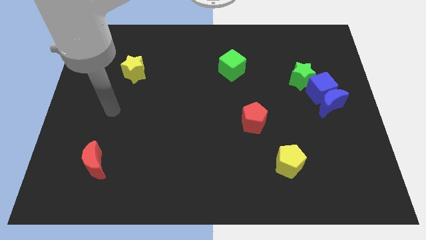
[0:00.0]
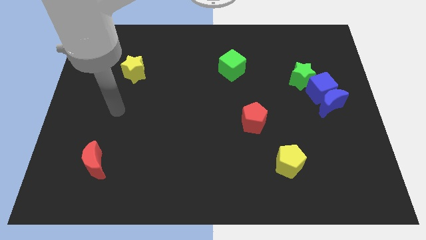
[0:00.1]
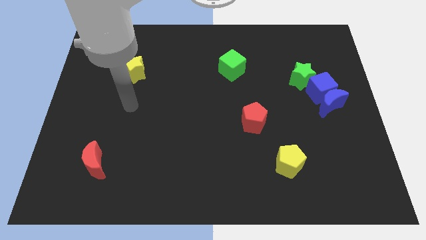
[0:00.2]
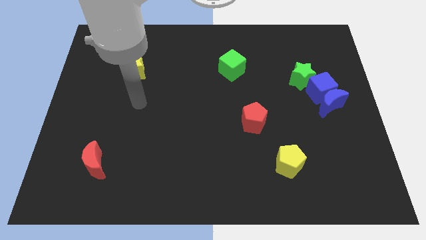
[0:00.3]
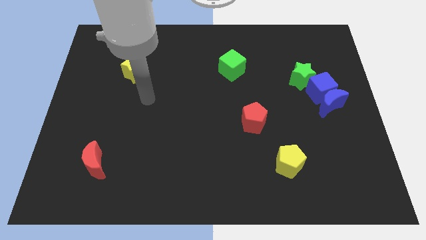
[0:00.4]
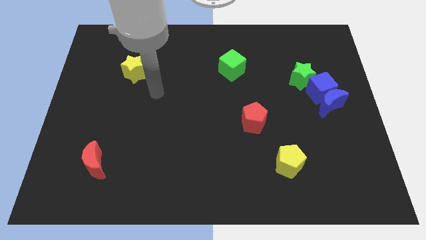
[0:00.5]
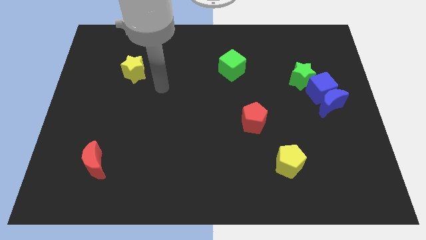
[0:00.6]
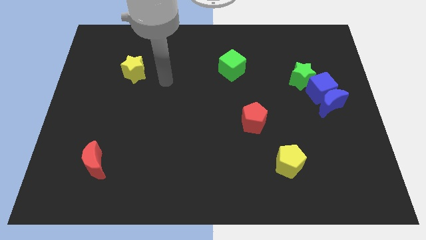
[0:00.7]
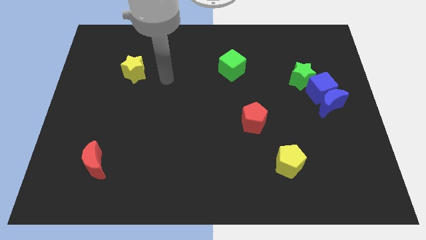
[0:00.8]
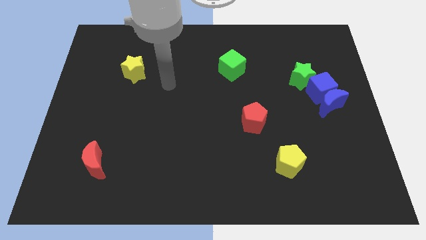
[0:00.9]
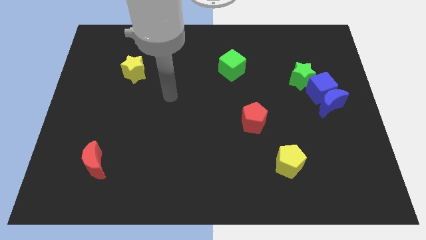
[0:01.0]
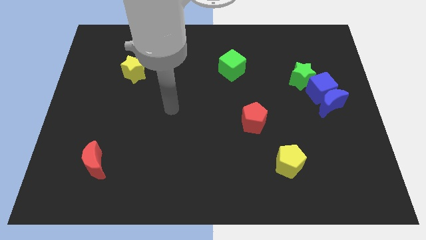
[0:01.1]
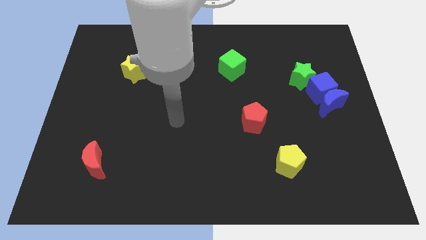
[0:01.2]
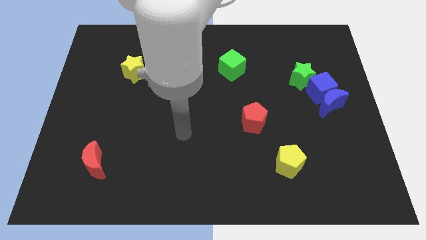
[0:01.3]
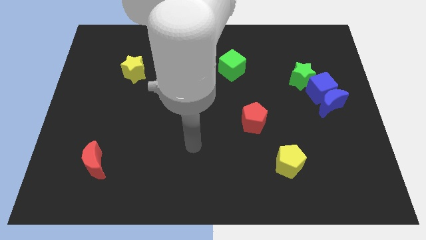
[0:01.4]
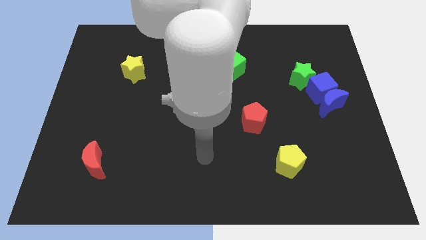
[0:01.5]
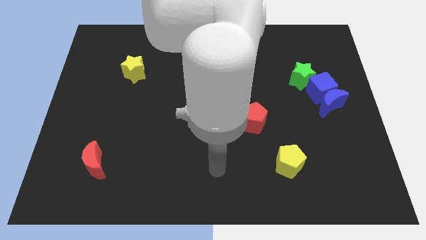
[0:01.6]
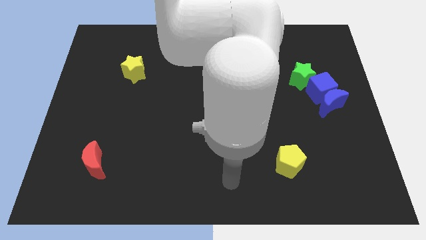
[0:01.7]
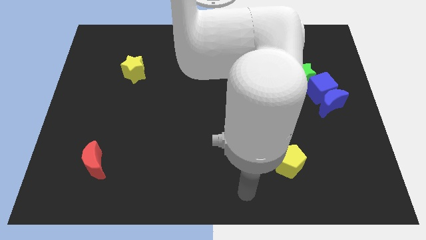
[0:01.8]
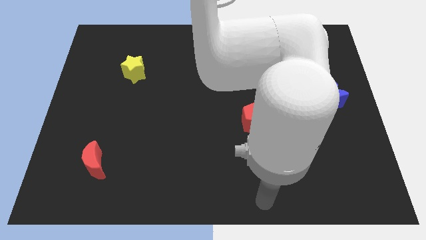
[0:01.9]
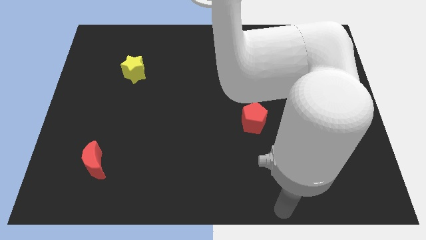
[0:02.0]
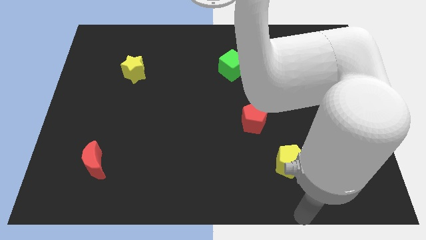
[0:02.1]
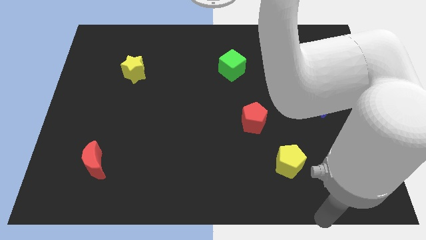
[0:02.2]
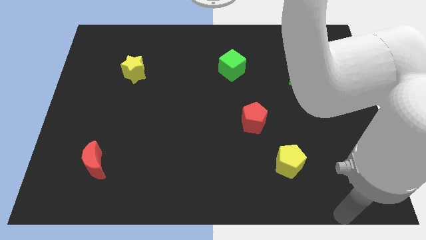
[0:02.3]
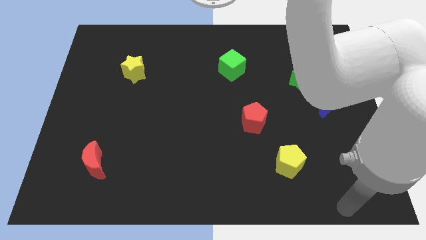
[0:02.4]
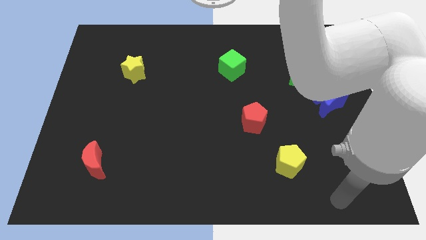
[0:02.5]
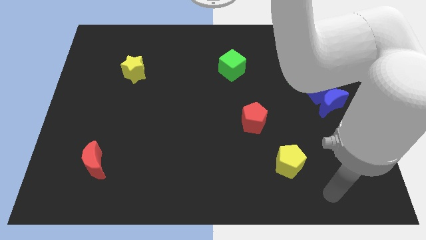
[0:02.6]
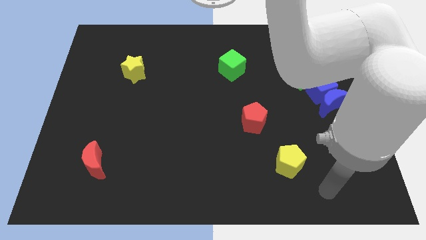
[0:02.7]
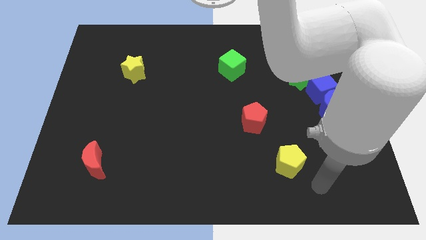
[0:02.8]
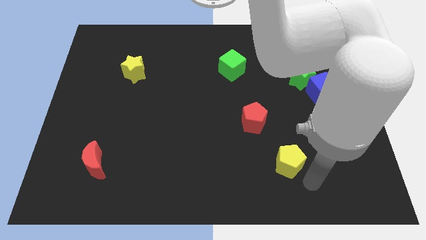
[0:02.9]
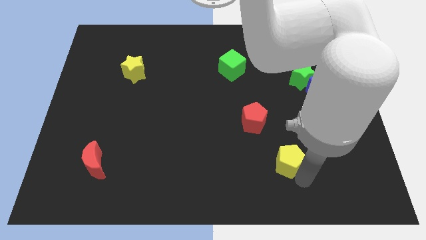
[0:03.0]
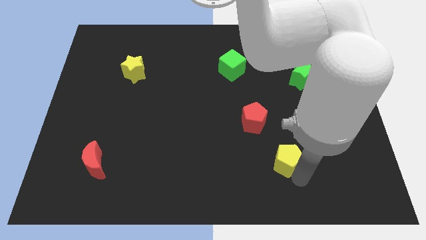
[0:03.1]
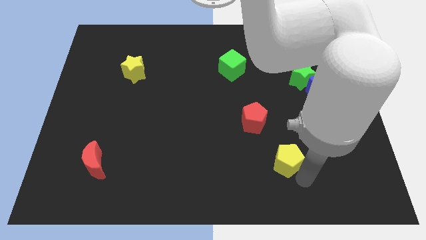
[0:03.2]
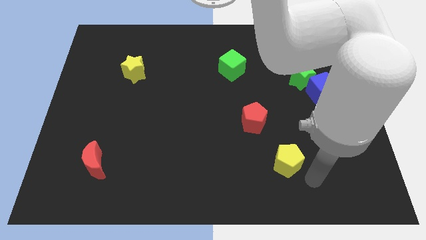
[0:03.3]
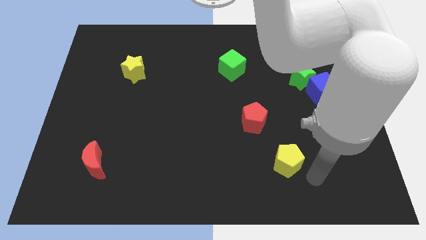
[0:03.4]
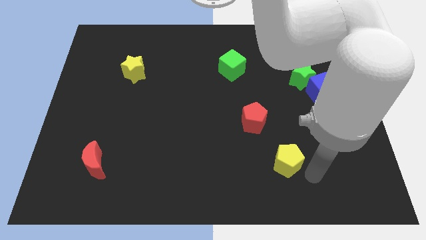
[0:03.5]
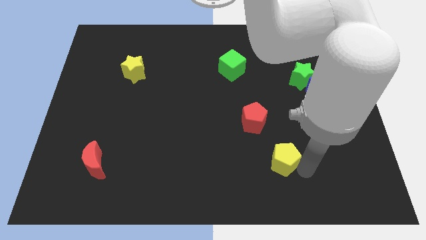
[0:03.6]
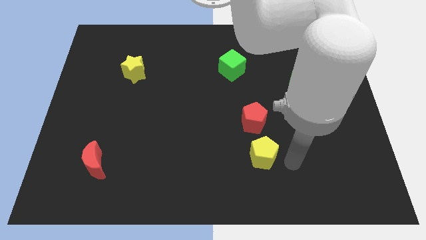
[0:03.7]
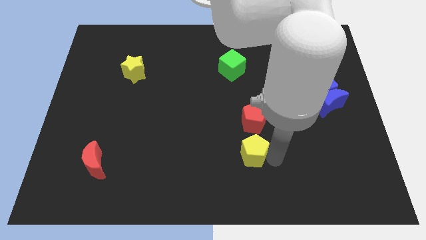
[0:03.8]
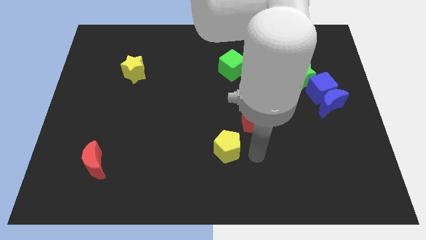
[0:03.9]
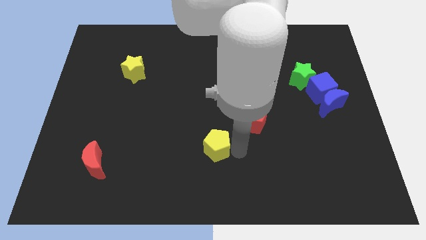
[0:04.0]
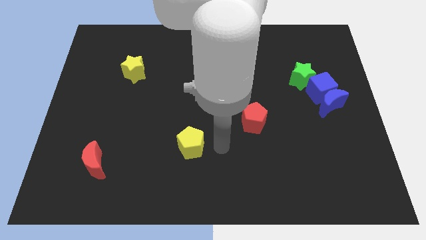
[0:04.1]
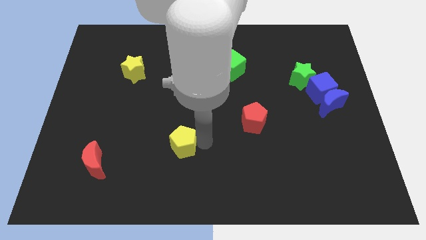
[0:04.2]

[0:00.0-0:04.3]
place the yellow pentagon diagonally below the yellow star

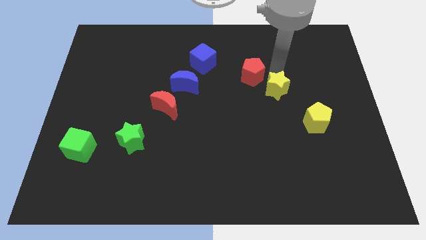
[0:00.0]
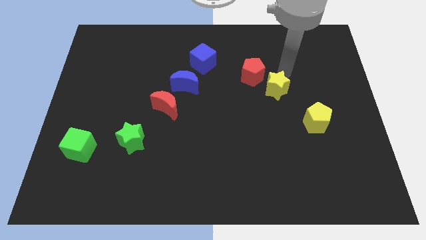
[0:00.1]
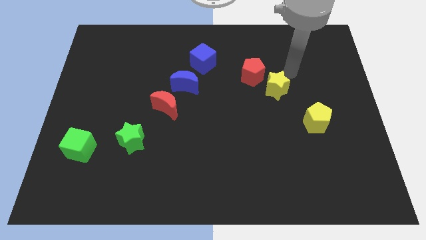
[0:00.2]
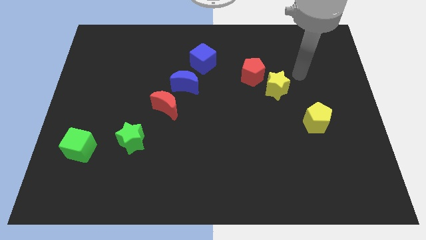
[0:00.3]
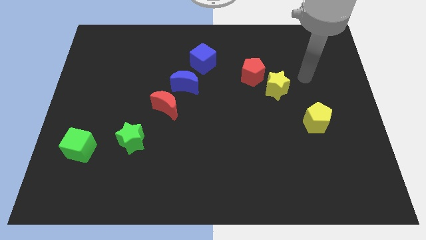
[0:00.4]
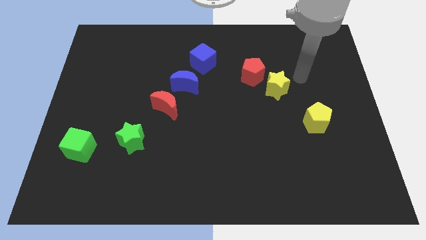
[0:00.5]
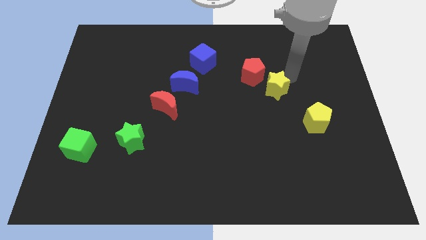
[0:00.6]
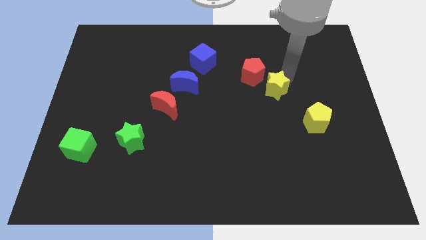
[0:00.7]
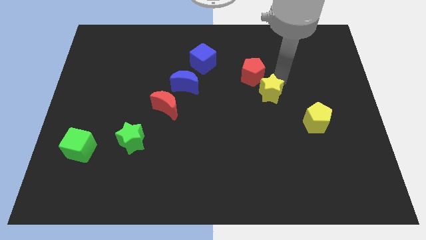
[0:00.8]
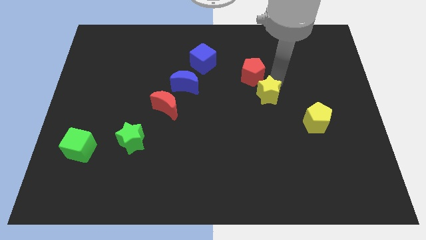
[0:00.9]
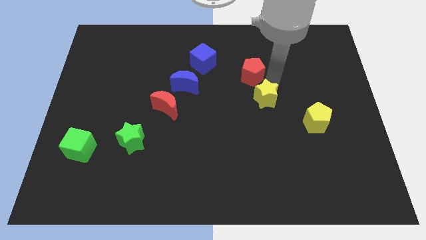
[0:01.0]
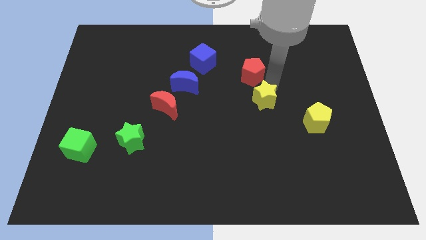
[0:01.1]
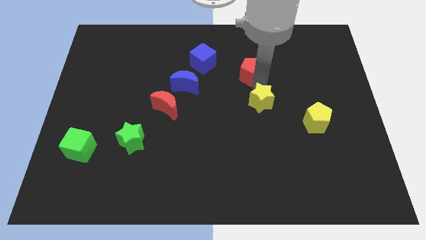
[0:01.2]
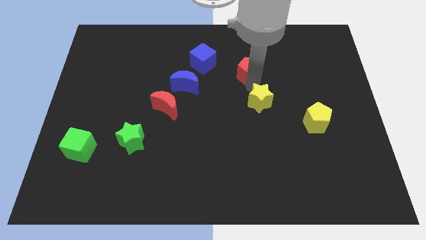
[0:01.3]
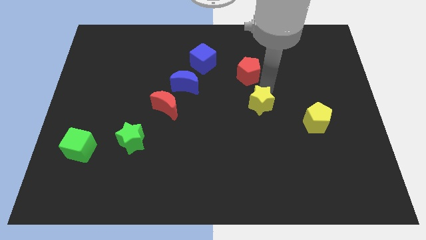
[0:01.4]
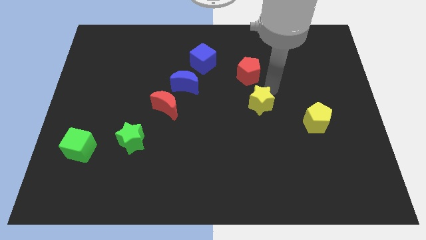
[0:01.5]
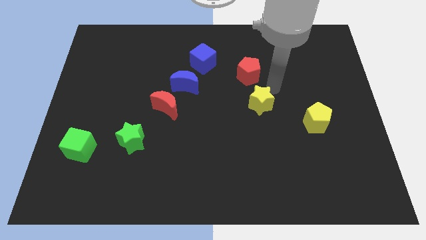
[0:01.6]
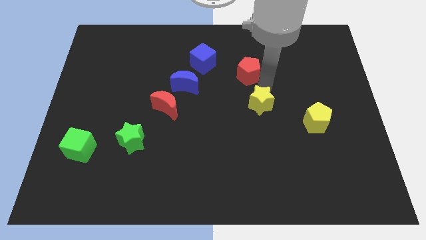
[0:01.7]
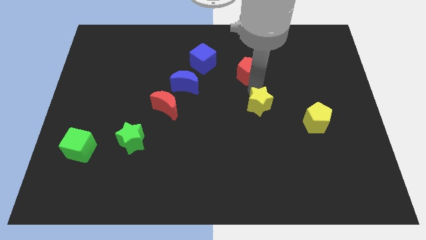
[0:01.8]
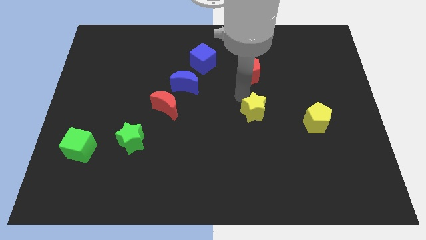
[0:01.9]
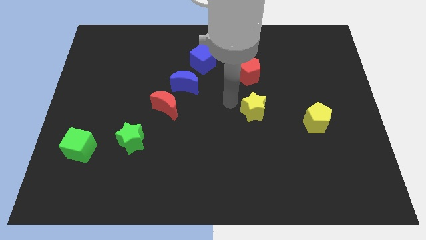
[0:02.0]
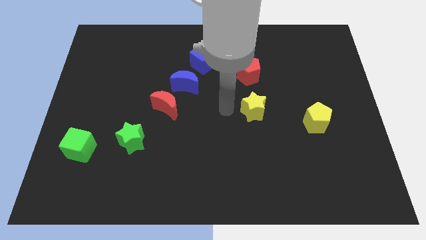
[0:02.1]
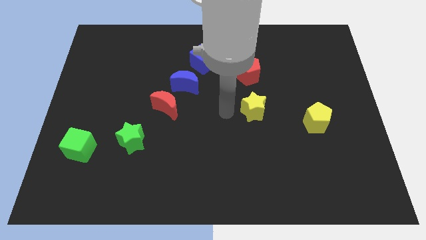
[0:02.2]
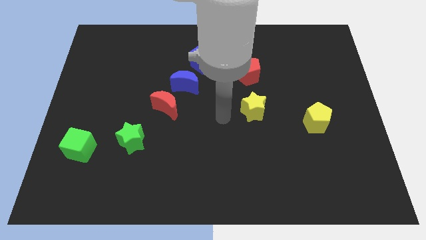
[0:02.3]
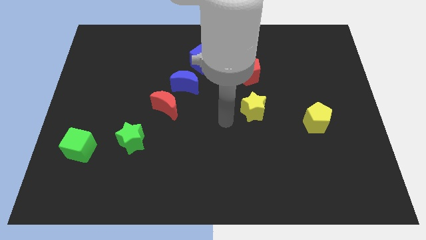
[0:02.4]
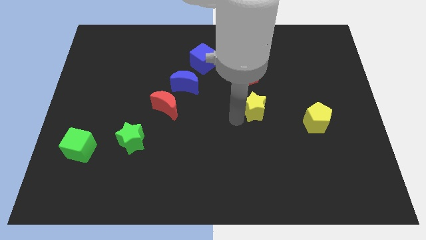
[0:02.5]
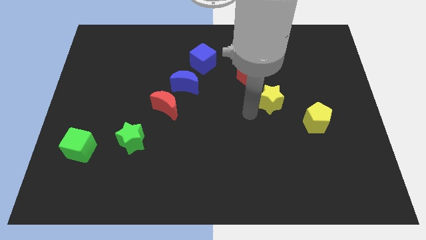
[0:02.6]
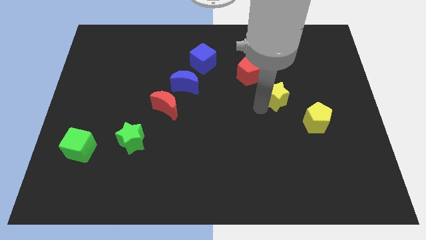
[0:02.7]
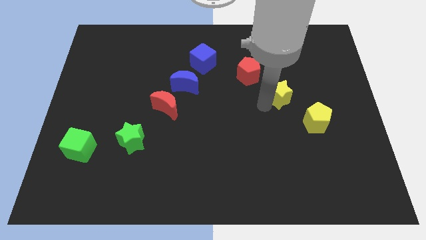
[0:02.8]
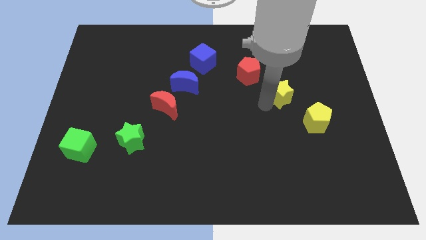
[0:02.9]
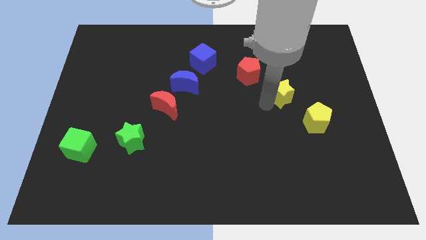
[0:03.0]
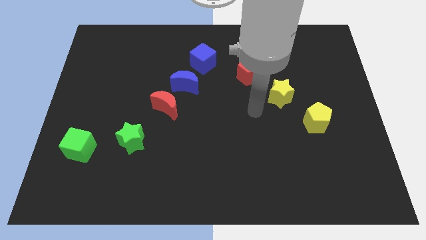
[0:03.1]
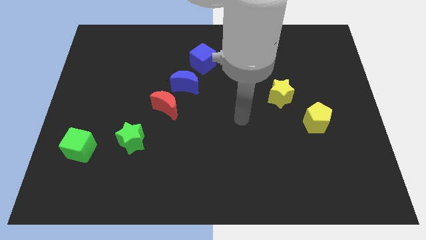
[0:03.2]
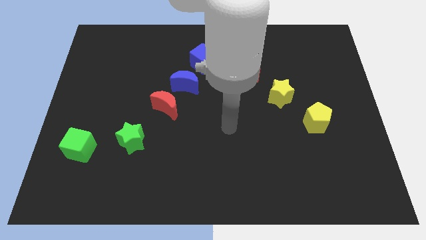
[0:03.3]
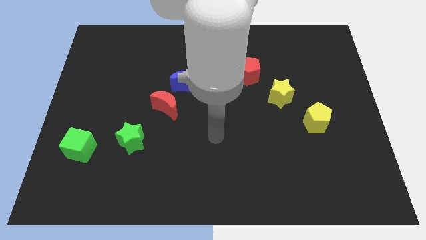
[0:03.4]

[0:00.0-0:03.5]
move the yellow star in between blue cube and yellow pentagon

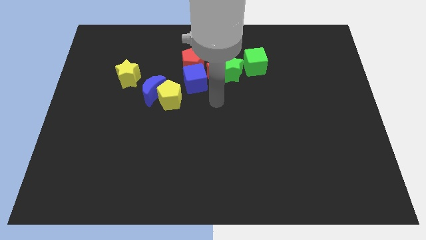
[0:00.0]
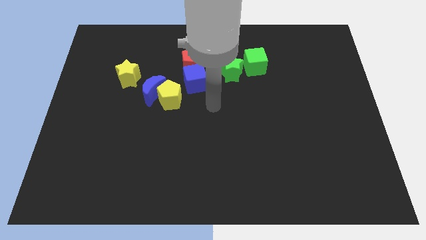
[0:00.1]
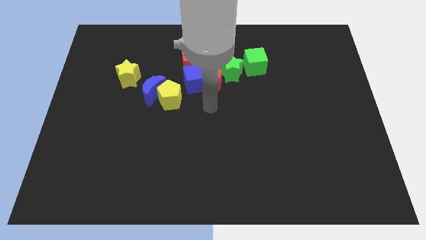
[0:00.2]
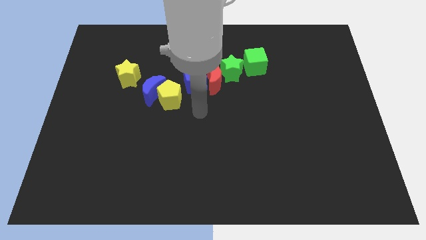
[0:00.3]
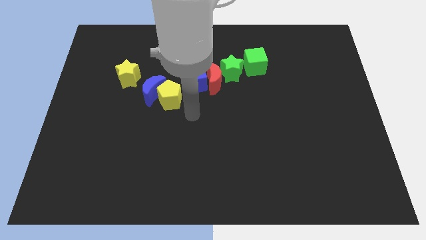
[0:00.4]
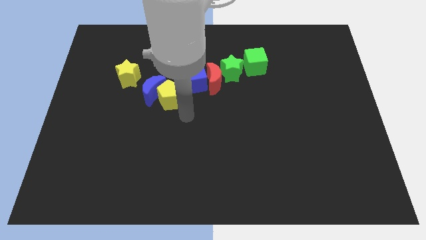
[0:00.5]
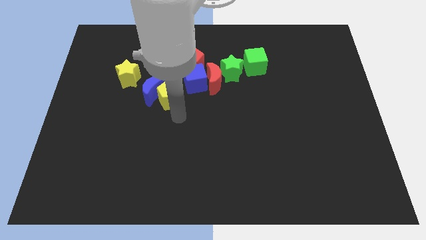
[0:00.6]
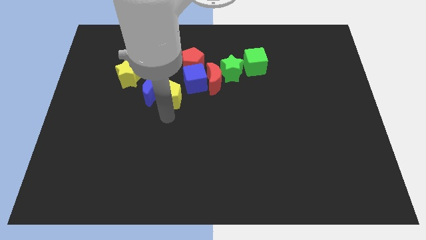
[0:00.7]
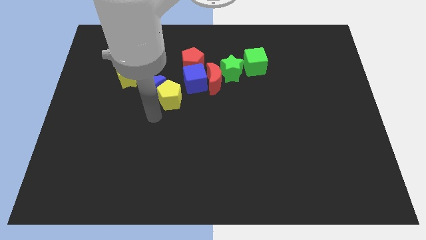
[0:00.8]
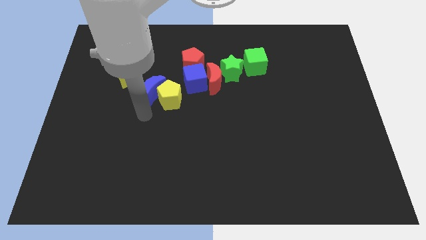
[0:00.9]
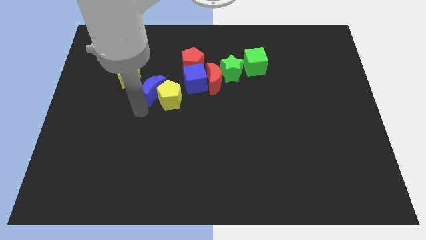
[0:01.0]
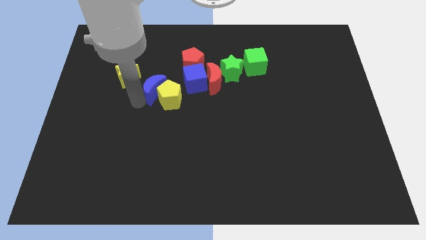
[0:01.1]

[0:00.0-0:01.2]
place your arm to the bottom of the blue moon

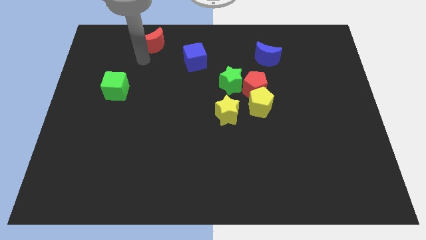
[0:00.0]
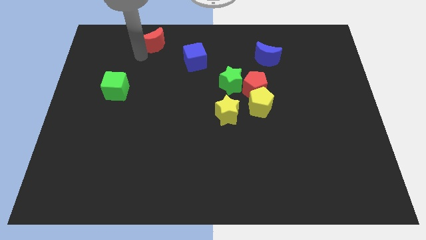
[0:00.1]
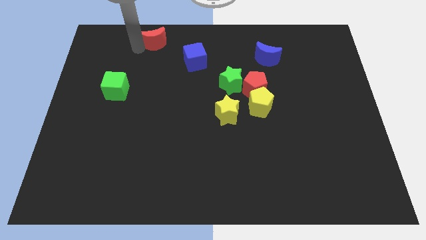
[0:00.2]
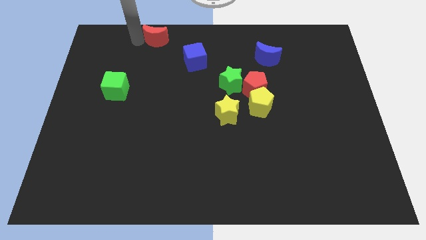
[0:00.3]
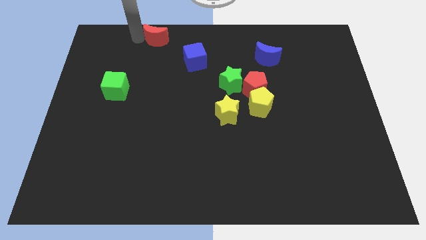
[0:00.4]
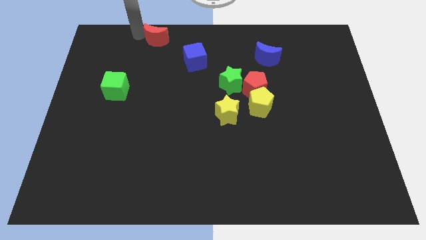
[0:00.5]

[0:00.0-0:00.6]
push red moon upwards
